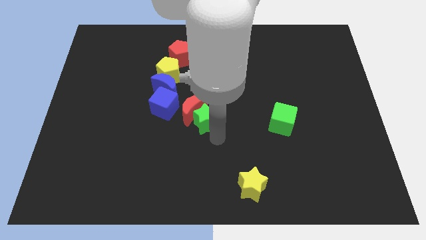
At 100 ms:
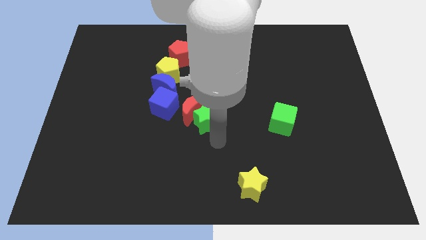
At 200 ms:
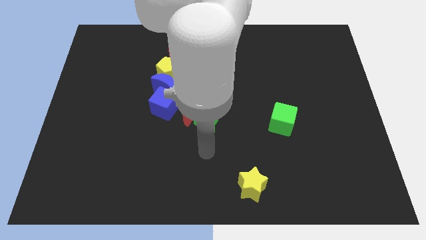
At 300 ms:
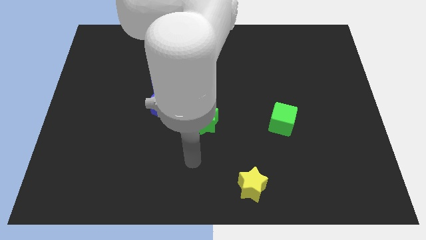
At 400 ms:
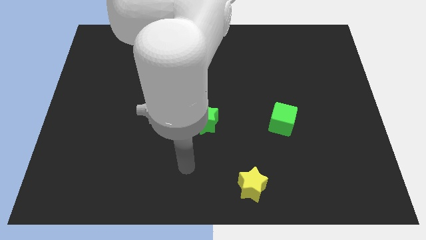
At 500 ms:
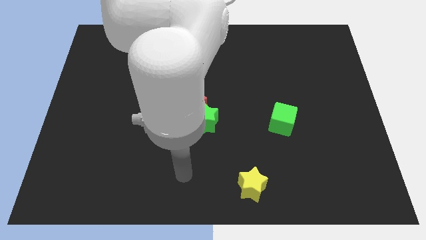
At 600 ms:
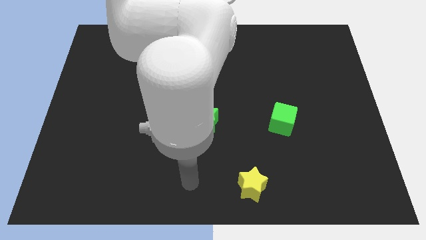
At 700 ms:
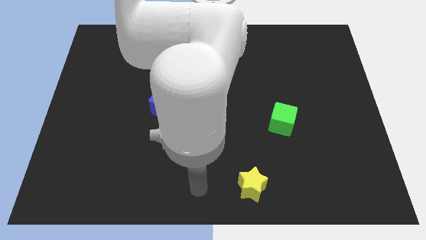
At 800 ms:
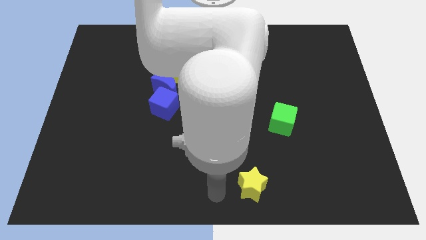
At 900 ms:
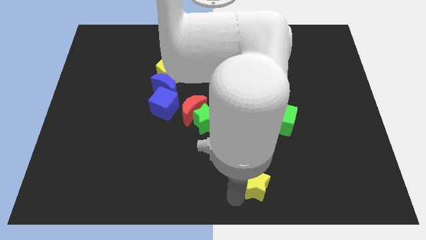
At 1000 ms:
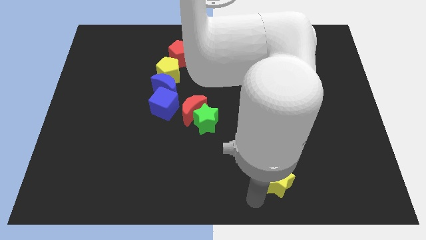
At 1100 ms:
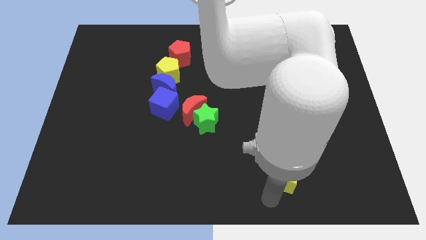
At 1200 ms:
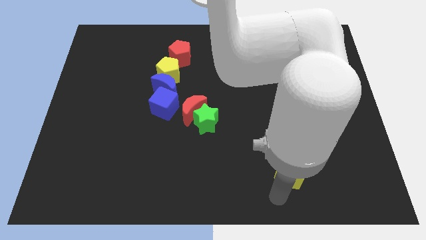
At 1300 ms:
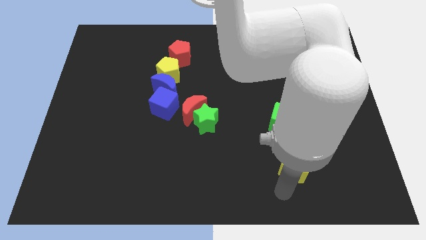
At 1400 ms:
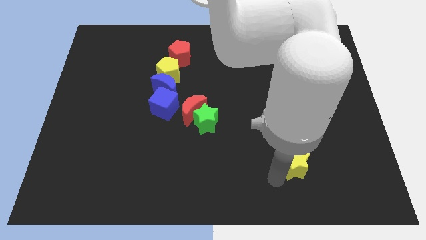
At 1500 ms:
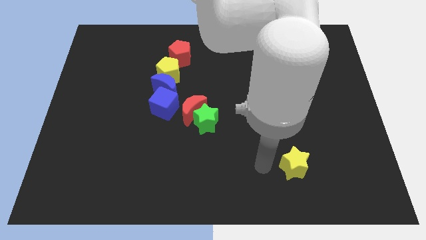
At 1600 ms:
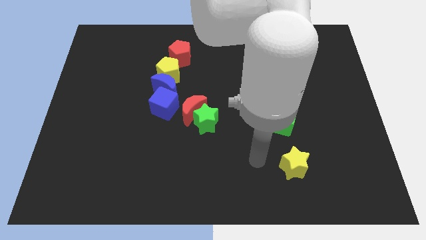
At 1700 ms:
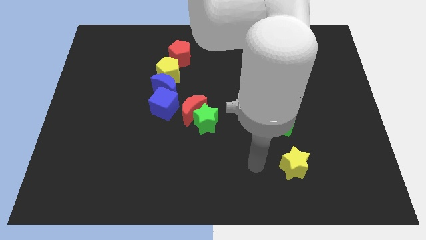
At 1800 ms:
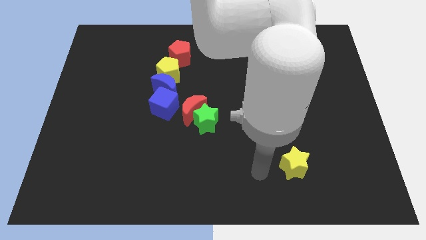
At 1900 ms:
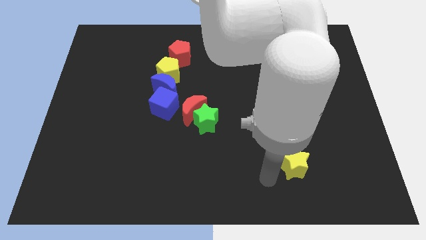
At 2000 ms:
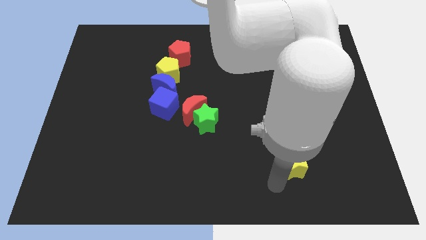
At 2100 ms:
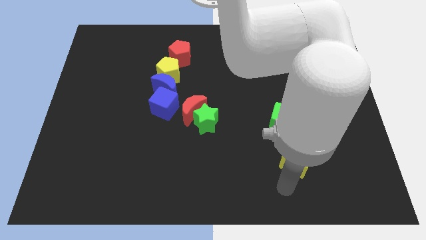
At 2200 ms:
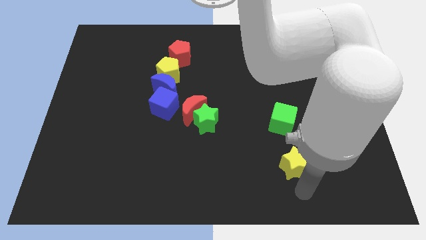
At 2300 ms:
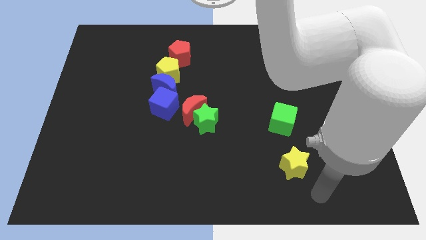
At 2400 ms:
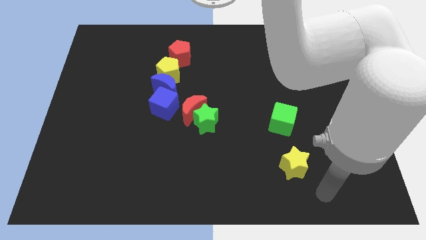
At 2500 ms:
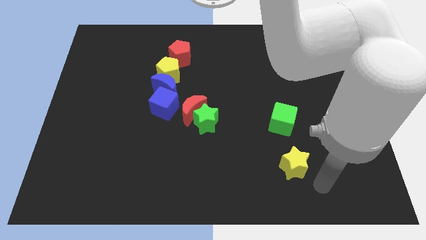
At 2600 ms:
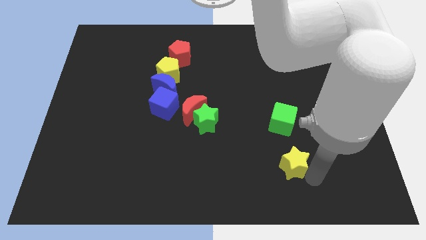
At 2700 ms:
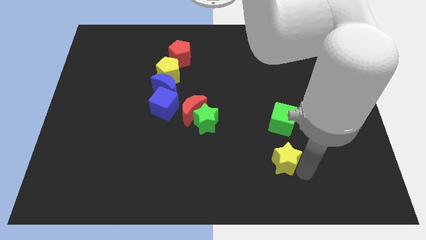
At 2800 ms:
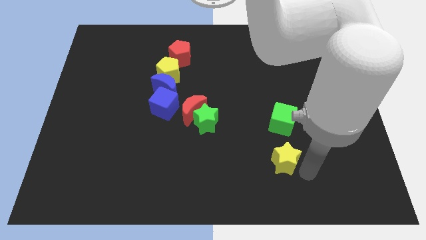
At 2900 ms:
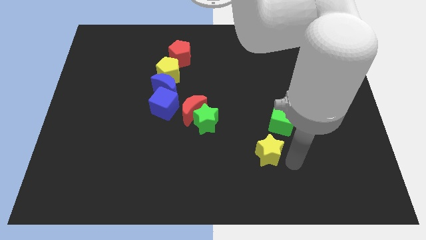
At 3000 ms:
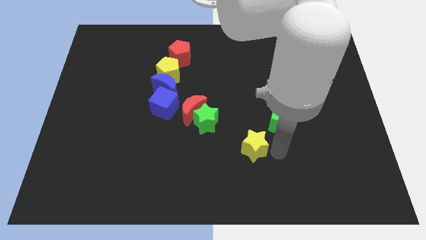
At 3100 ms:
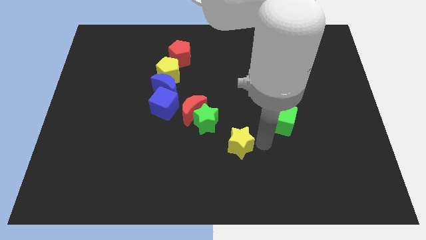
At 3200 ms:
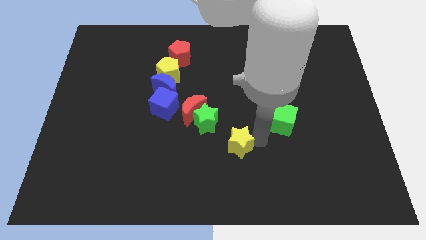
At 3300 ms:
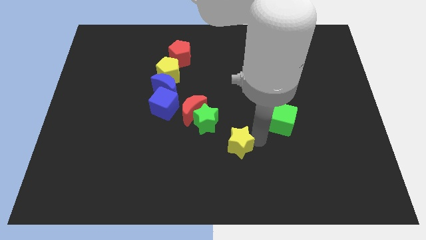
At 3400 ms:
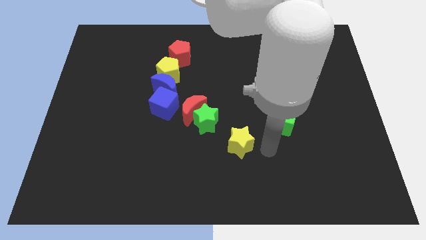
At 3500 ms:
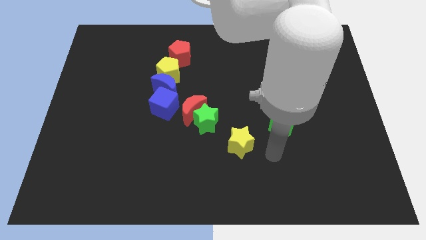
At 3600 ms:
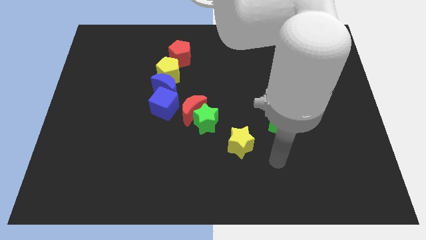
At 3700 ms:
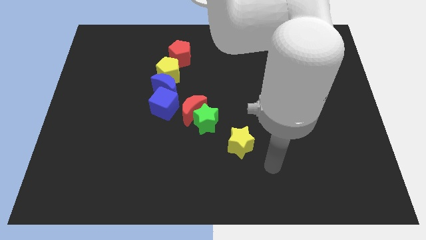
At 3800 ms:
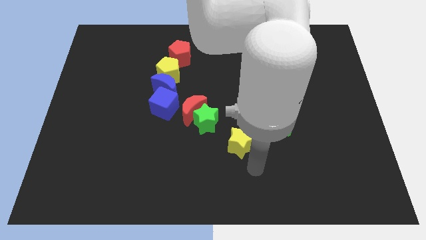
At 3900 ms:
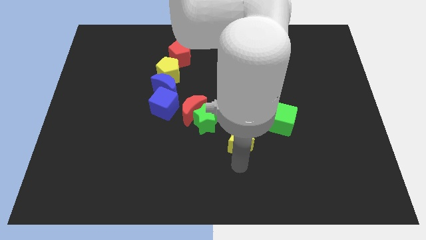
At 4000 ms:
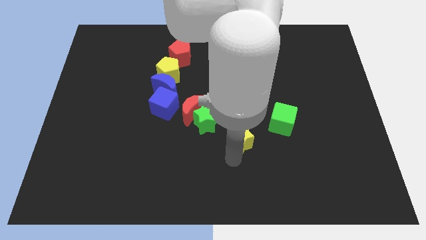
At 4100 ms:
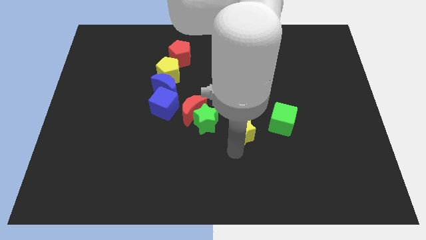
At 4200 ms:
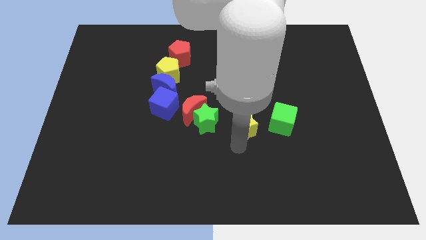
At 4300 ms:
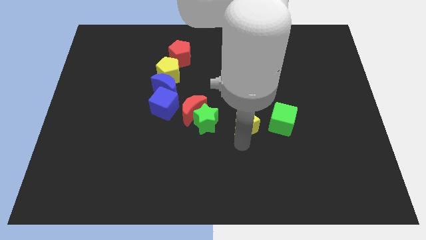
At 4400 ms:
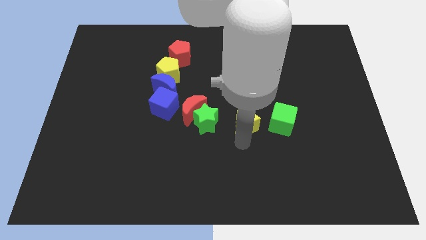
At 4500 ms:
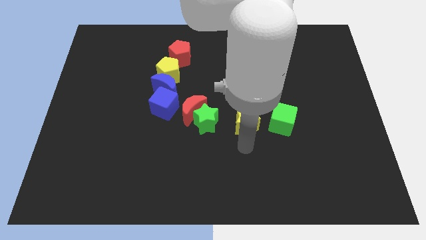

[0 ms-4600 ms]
push the yellow star in between the green star and green cube

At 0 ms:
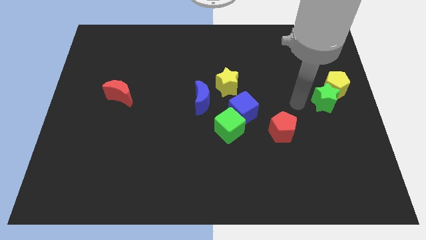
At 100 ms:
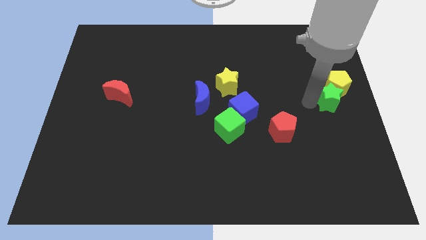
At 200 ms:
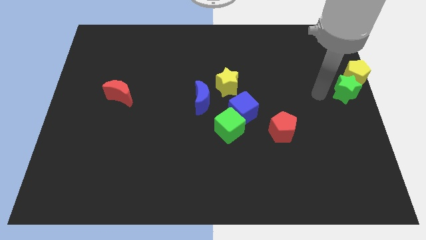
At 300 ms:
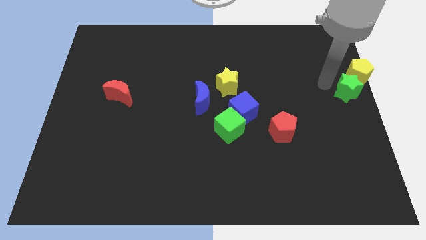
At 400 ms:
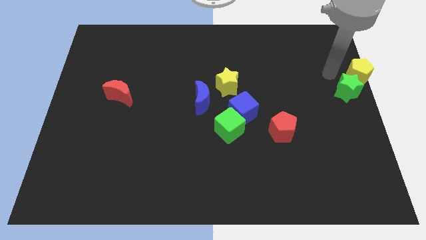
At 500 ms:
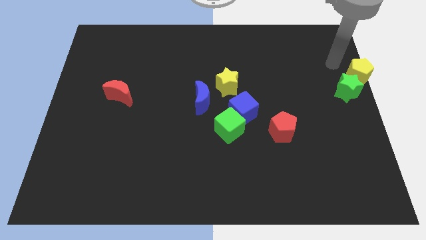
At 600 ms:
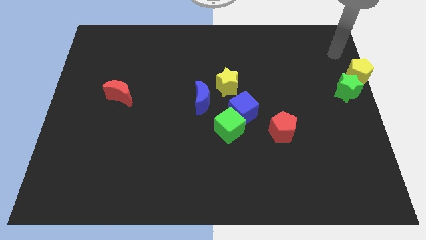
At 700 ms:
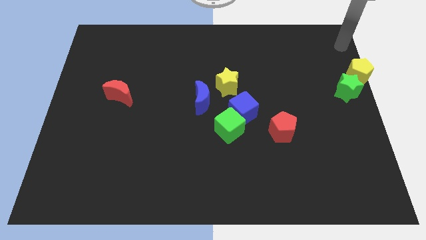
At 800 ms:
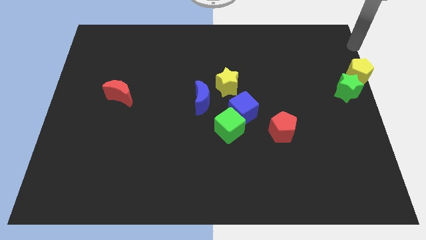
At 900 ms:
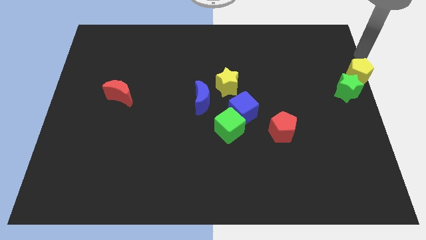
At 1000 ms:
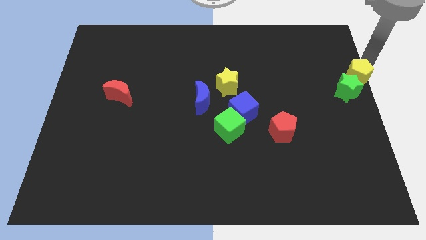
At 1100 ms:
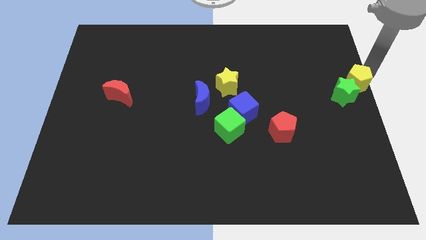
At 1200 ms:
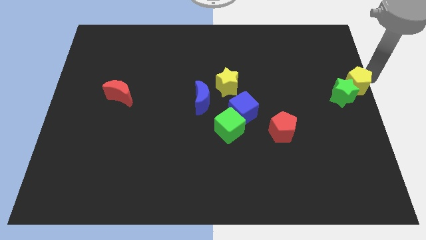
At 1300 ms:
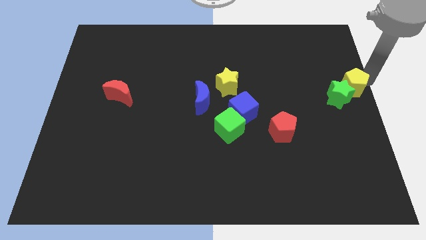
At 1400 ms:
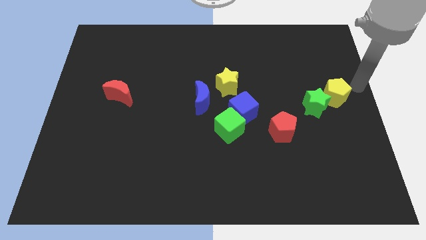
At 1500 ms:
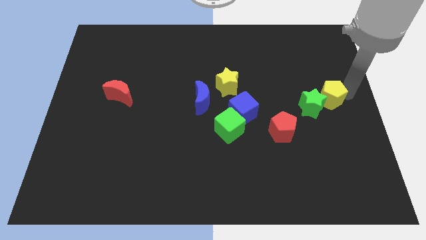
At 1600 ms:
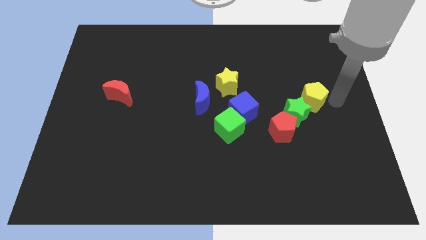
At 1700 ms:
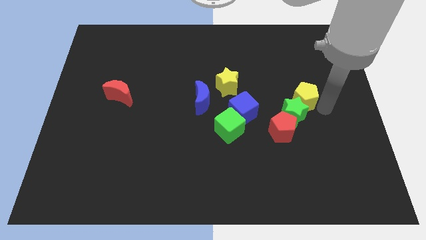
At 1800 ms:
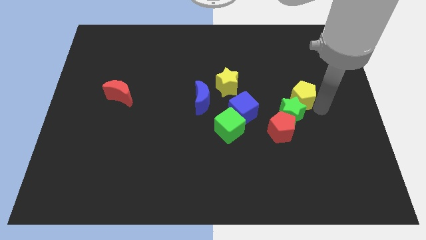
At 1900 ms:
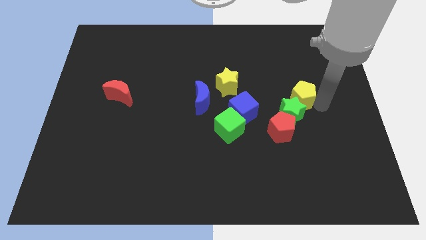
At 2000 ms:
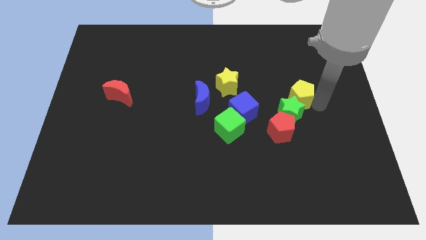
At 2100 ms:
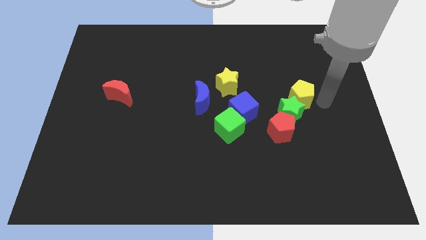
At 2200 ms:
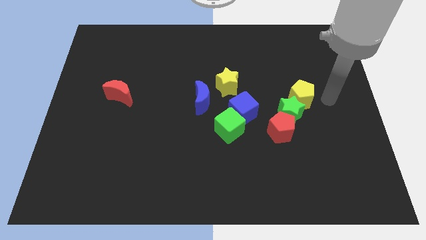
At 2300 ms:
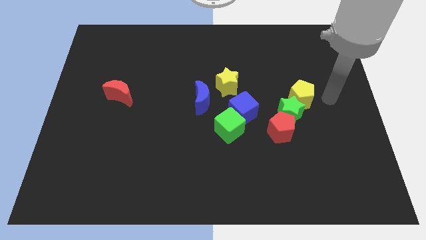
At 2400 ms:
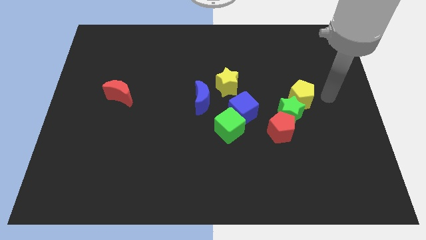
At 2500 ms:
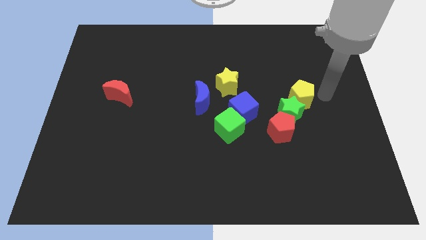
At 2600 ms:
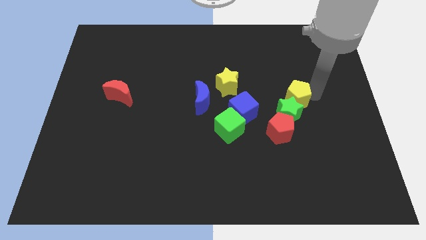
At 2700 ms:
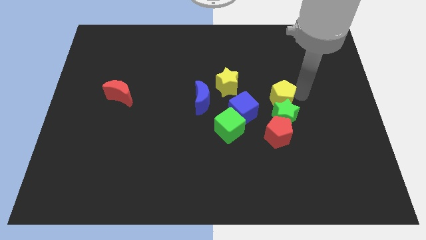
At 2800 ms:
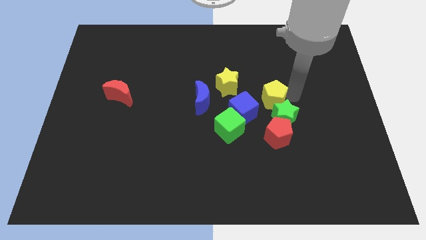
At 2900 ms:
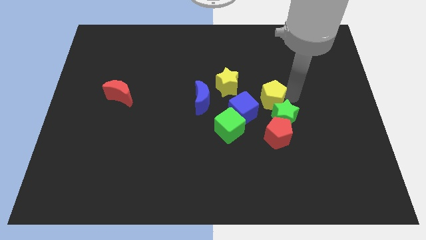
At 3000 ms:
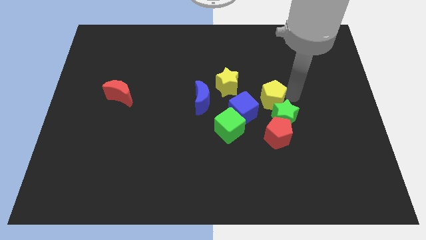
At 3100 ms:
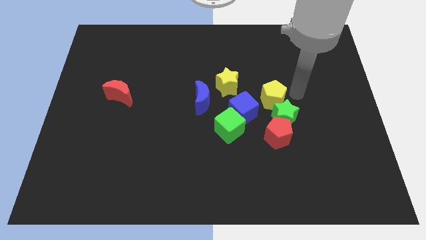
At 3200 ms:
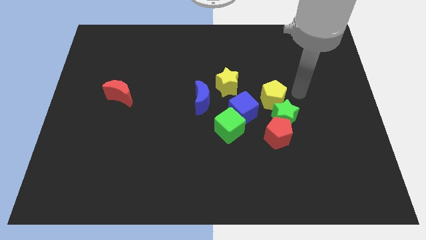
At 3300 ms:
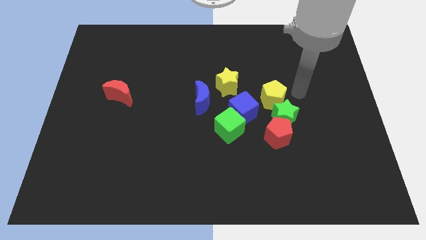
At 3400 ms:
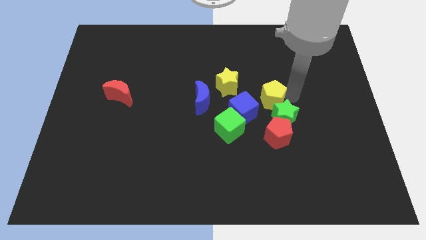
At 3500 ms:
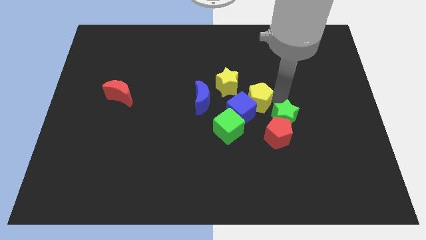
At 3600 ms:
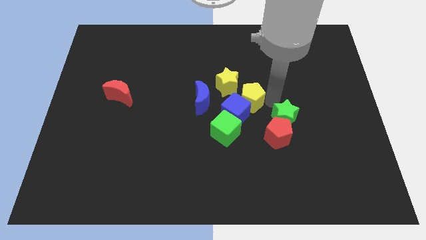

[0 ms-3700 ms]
place yellow pentagon into the blue cube

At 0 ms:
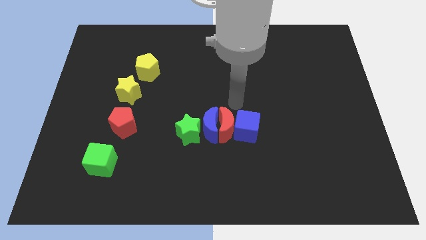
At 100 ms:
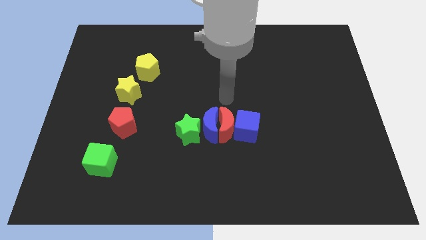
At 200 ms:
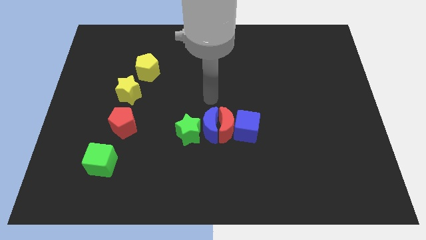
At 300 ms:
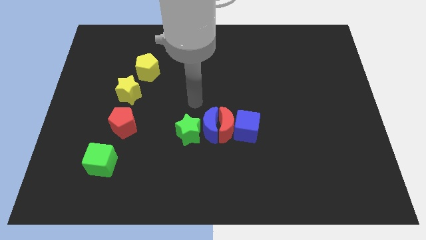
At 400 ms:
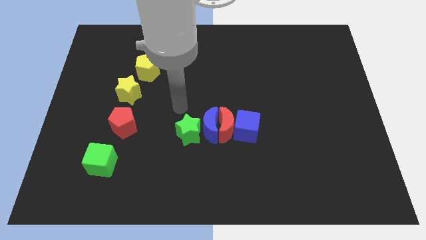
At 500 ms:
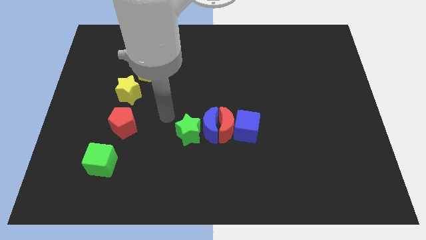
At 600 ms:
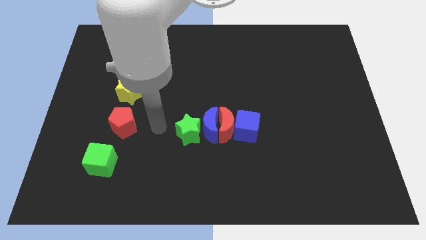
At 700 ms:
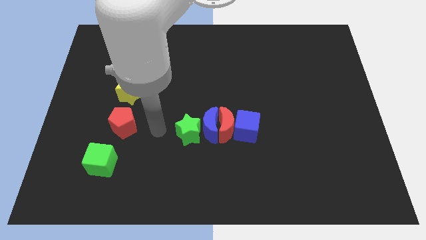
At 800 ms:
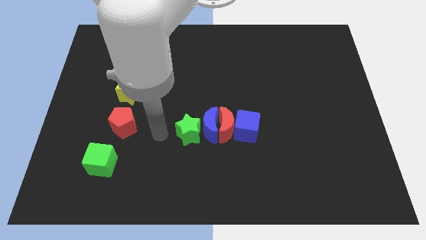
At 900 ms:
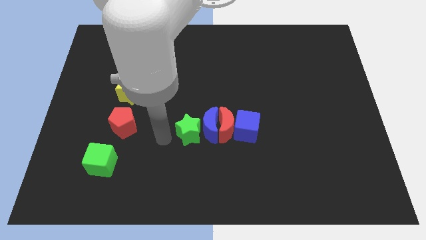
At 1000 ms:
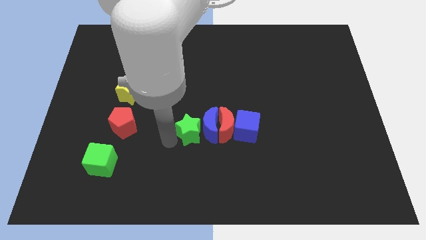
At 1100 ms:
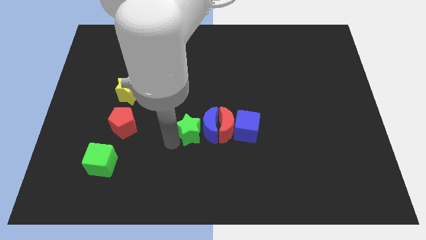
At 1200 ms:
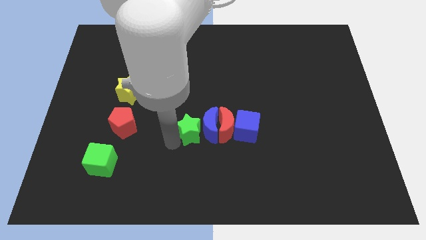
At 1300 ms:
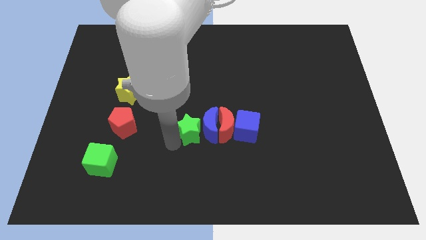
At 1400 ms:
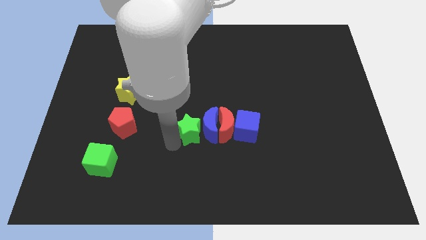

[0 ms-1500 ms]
move your arm to the left of the green star
